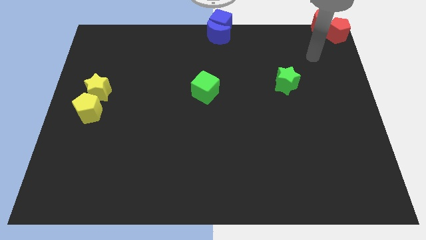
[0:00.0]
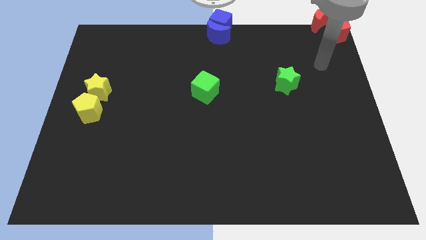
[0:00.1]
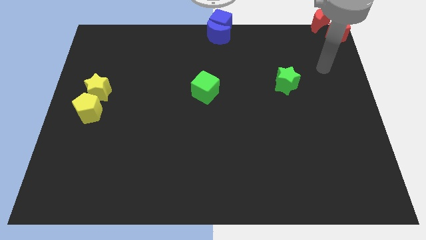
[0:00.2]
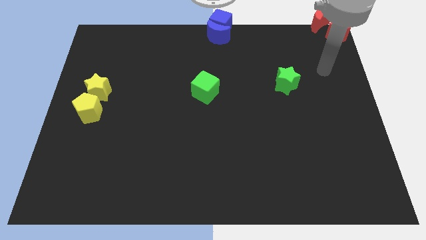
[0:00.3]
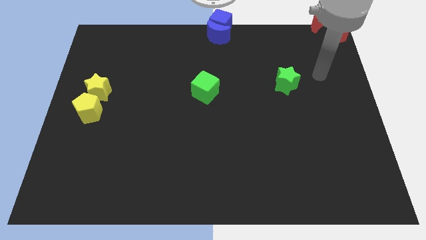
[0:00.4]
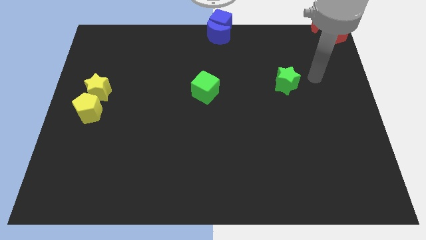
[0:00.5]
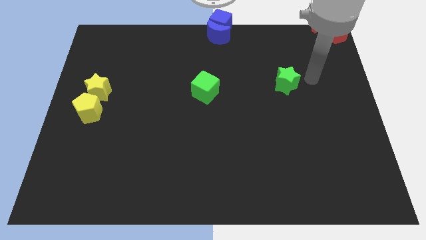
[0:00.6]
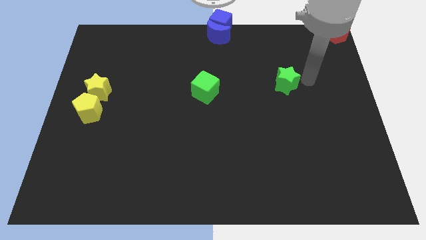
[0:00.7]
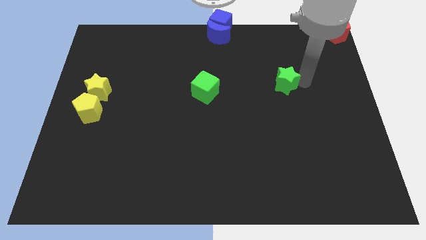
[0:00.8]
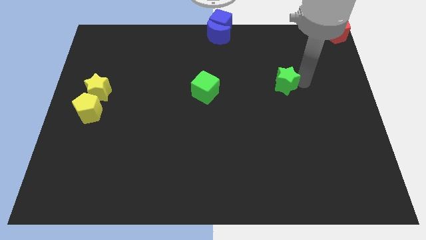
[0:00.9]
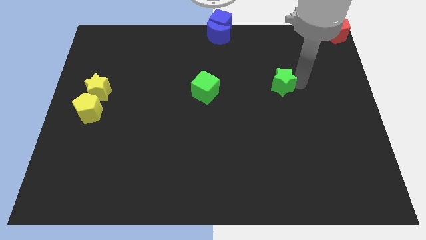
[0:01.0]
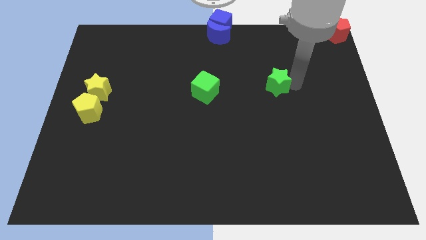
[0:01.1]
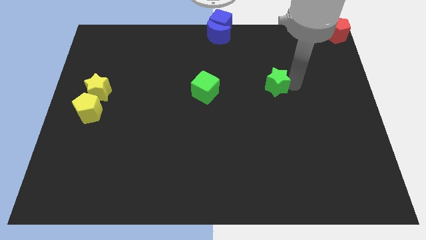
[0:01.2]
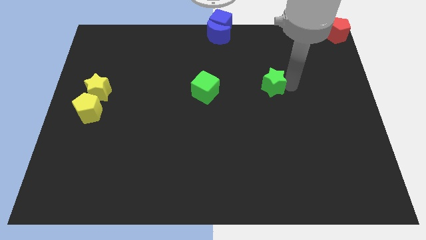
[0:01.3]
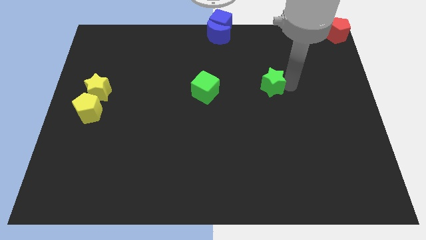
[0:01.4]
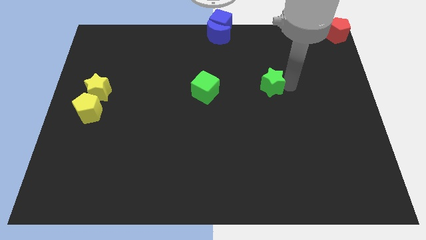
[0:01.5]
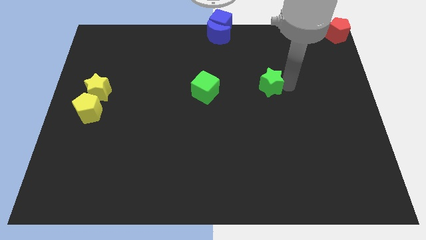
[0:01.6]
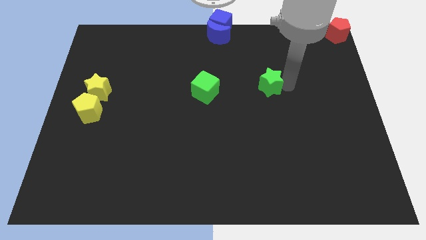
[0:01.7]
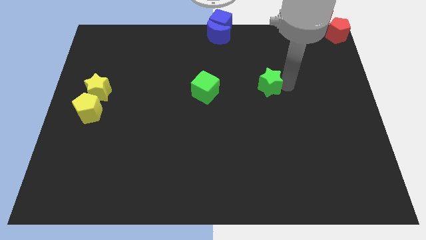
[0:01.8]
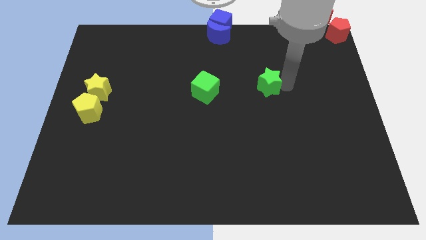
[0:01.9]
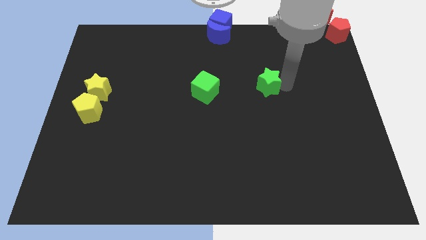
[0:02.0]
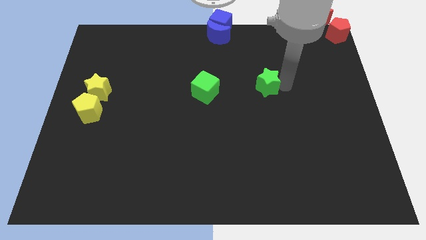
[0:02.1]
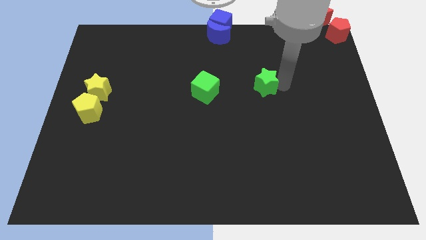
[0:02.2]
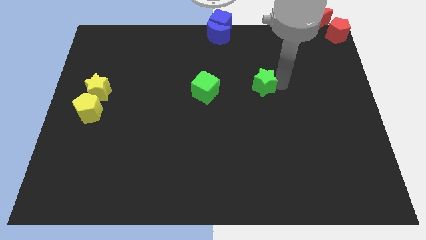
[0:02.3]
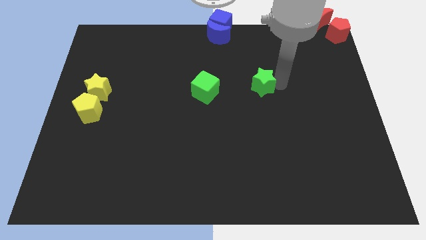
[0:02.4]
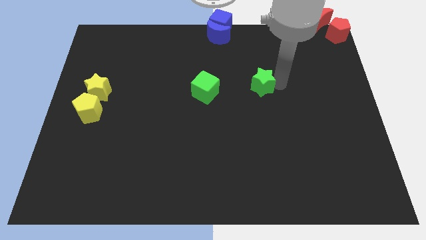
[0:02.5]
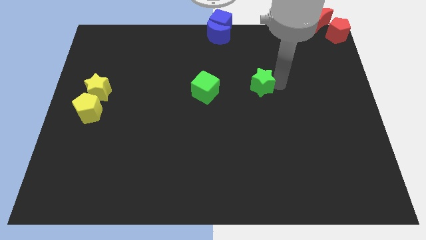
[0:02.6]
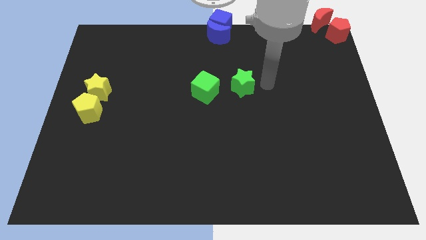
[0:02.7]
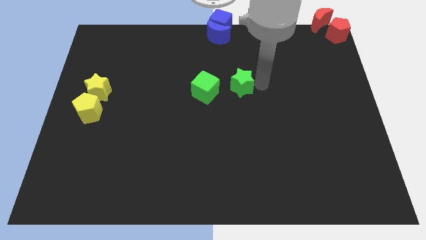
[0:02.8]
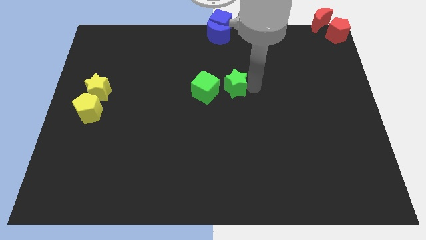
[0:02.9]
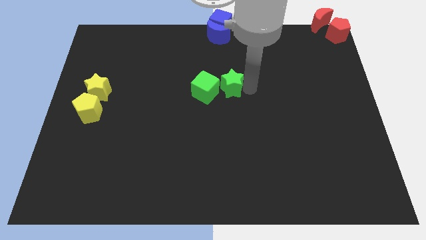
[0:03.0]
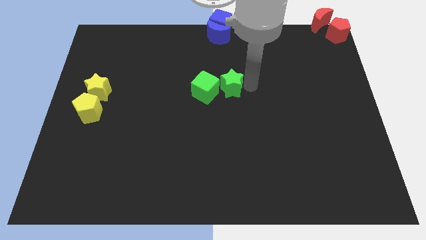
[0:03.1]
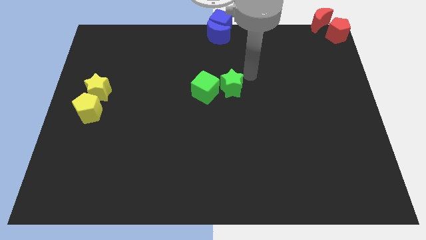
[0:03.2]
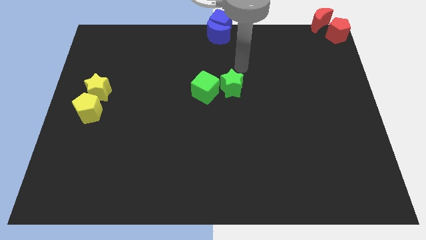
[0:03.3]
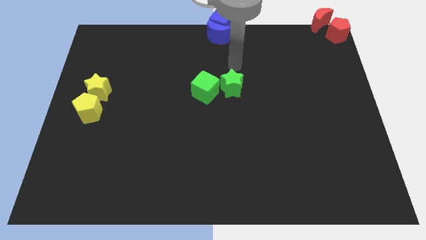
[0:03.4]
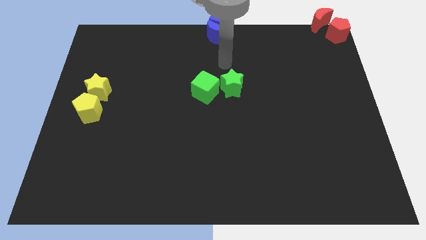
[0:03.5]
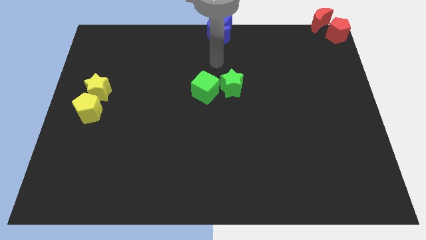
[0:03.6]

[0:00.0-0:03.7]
push the green star close to the green cube

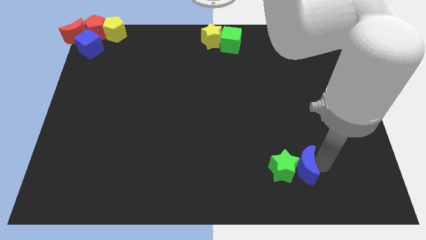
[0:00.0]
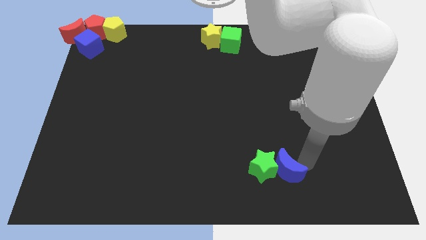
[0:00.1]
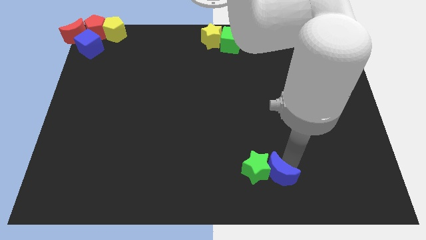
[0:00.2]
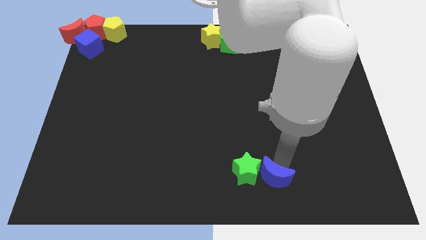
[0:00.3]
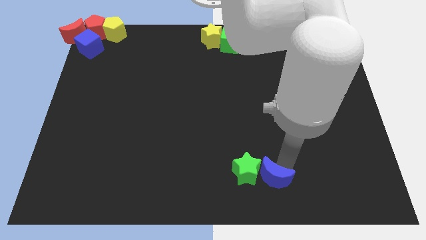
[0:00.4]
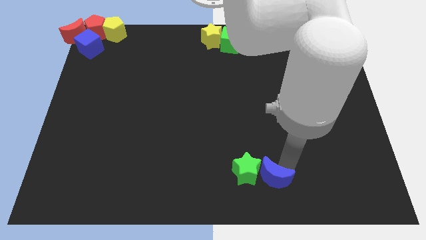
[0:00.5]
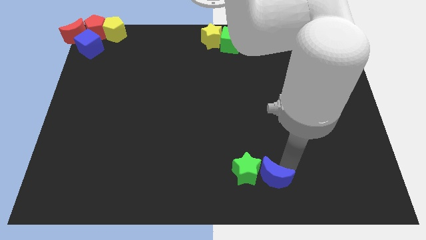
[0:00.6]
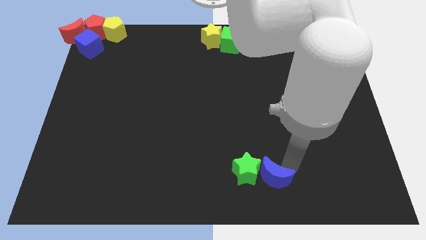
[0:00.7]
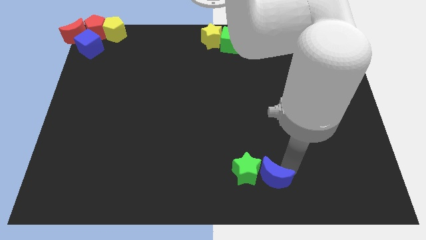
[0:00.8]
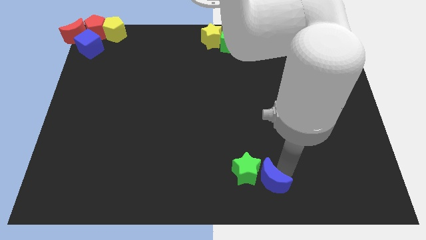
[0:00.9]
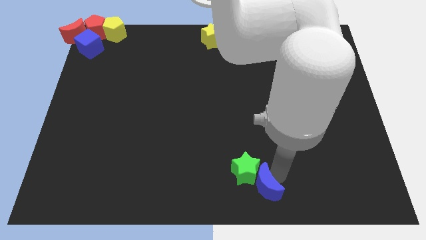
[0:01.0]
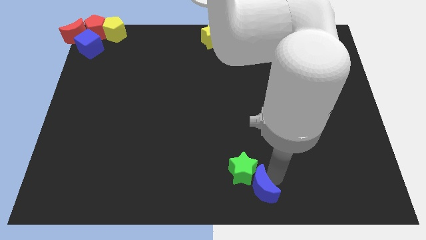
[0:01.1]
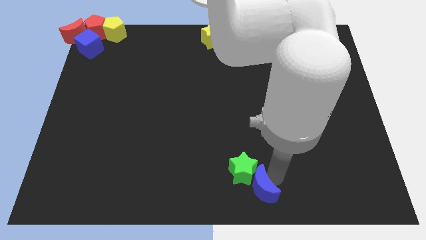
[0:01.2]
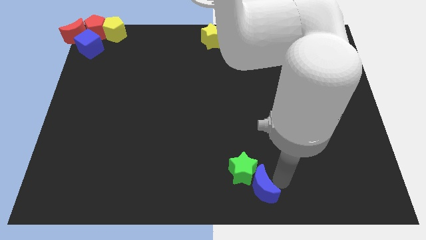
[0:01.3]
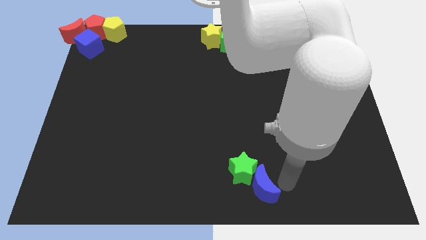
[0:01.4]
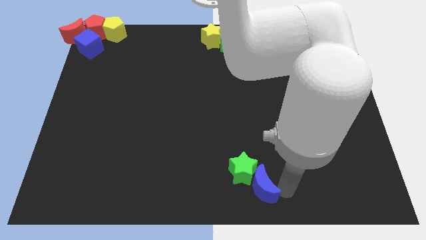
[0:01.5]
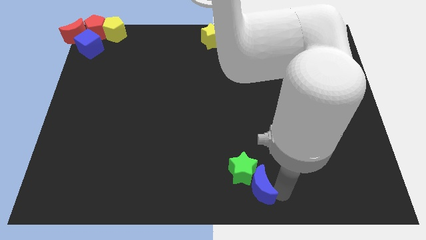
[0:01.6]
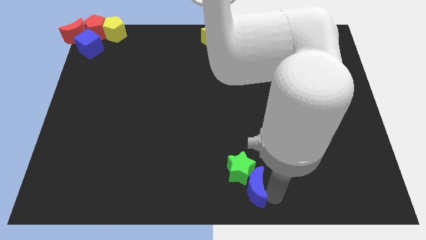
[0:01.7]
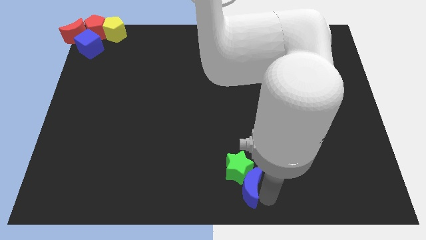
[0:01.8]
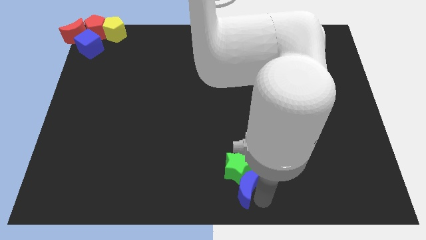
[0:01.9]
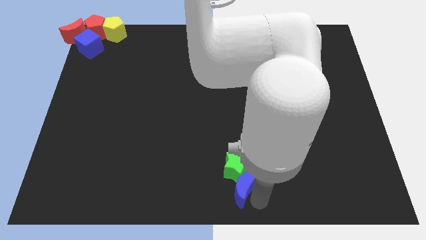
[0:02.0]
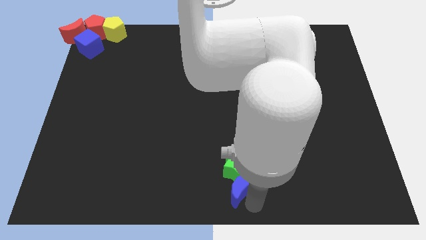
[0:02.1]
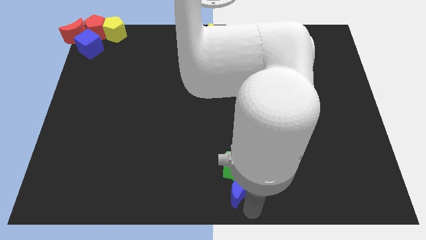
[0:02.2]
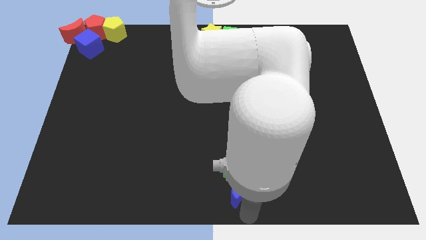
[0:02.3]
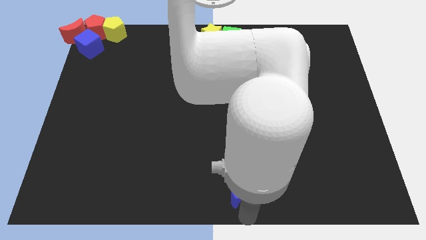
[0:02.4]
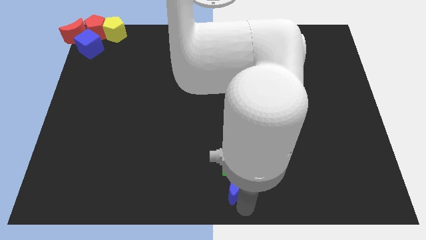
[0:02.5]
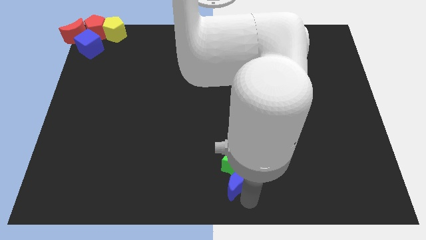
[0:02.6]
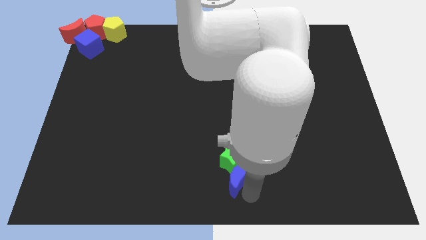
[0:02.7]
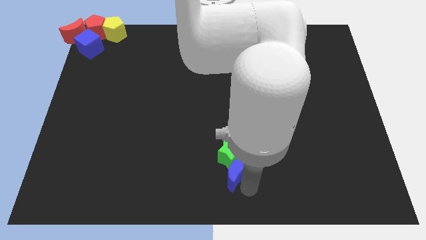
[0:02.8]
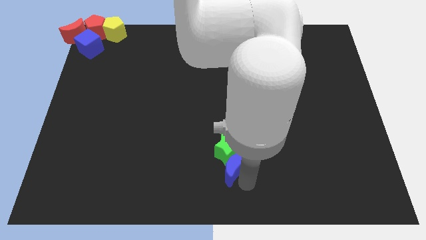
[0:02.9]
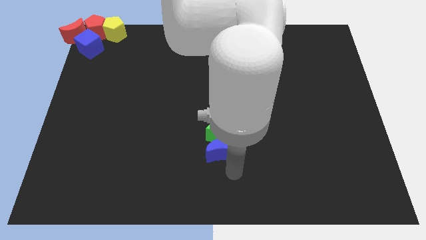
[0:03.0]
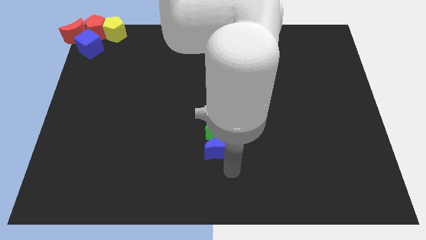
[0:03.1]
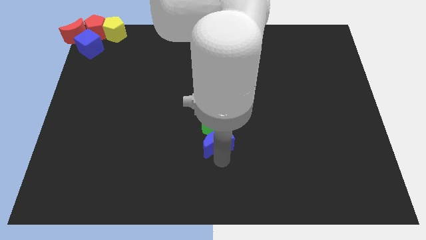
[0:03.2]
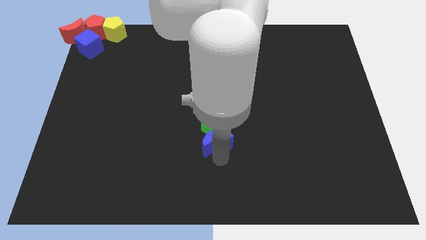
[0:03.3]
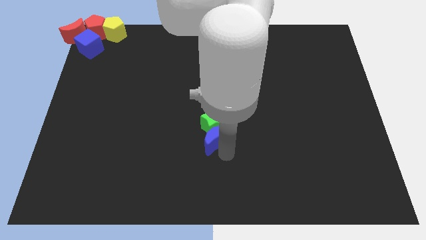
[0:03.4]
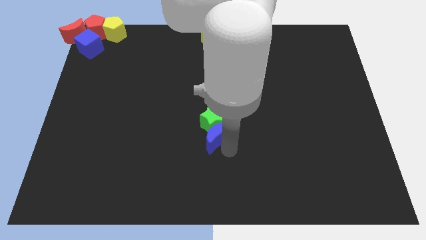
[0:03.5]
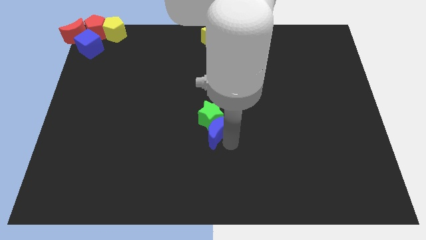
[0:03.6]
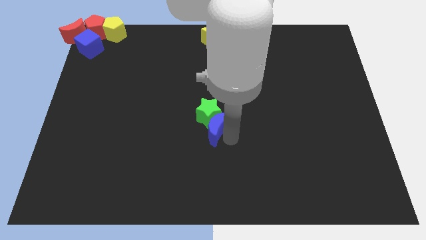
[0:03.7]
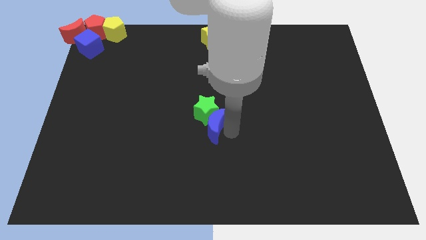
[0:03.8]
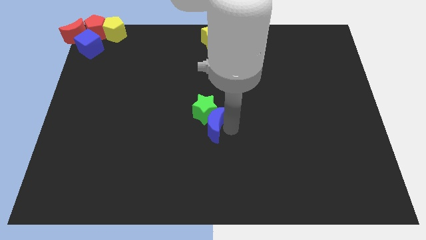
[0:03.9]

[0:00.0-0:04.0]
place the green star and the blue crescent at the center of the board

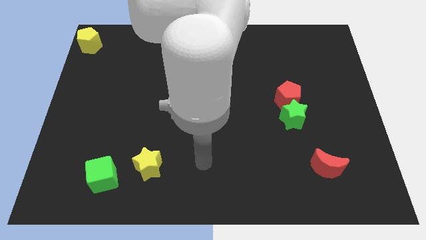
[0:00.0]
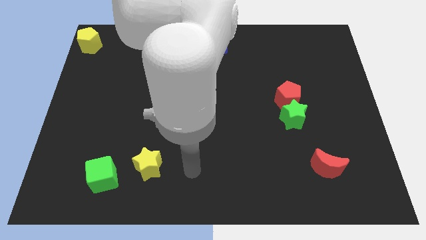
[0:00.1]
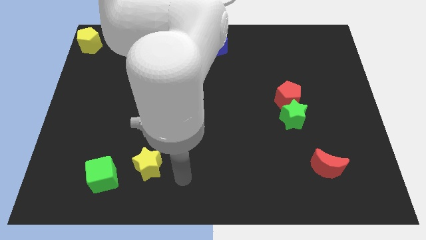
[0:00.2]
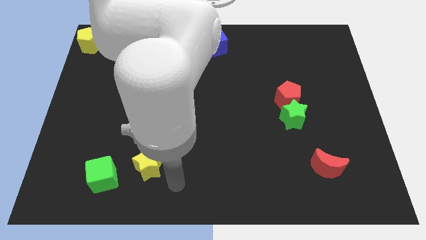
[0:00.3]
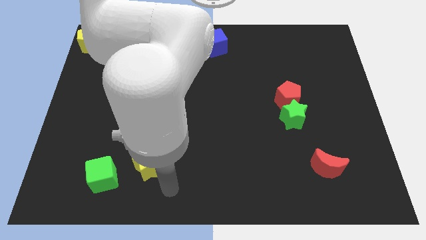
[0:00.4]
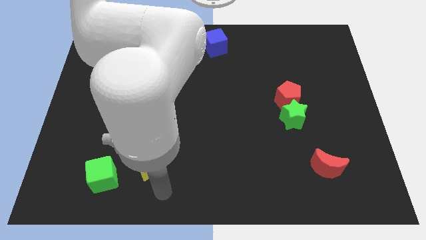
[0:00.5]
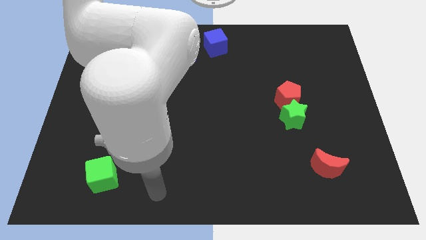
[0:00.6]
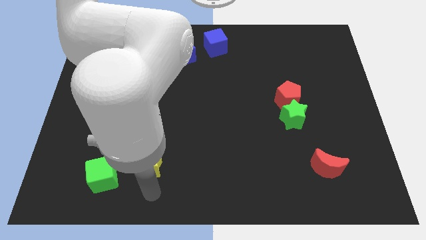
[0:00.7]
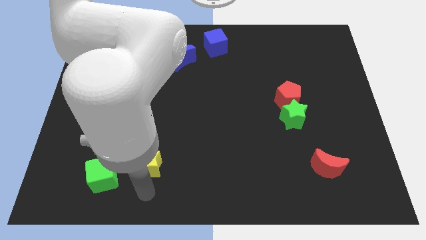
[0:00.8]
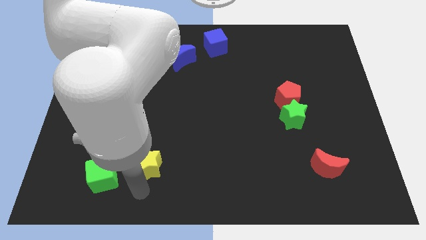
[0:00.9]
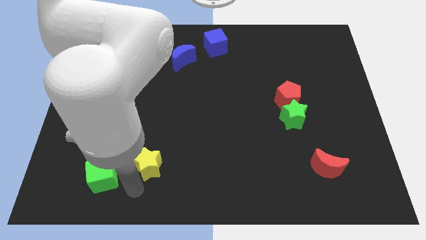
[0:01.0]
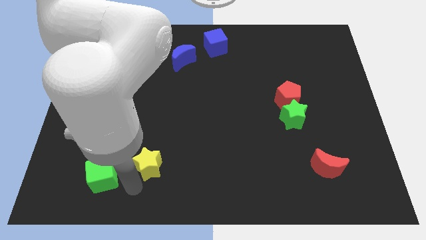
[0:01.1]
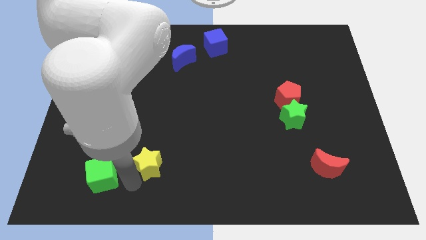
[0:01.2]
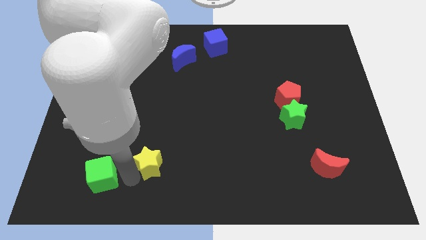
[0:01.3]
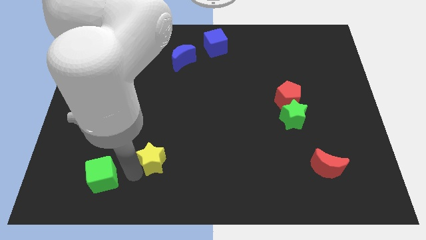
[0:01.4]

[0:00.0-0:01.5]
point your arm between yellow star and green cube
